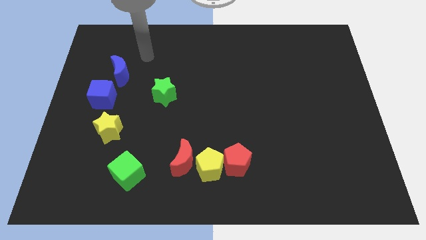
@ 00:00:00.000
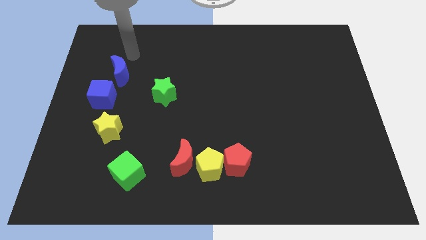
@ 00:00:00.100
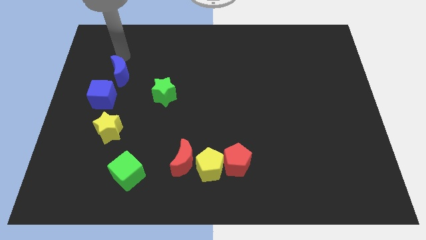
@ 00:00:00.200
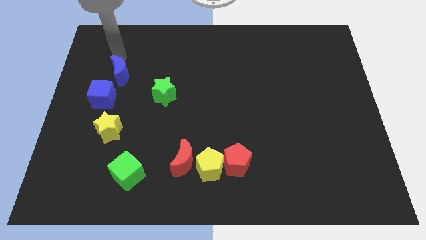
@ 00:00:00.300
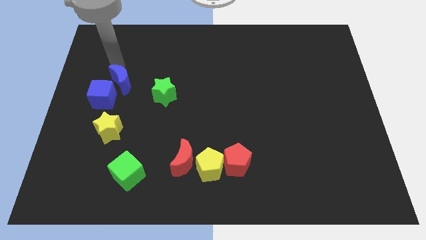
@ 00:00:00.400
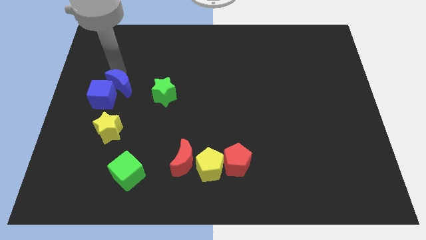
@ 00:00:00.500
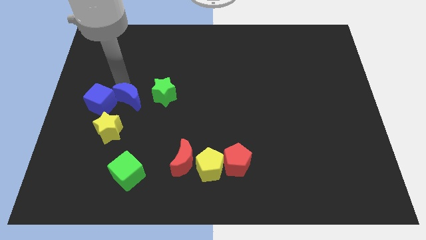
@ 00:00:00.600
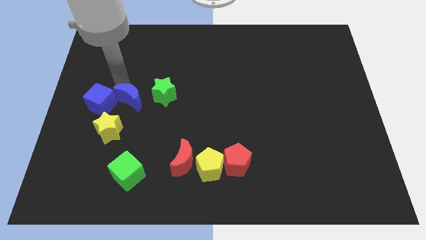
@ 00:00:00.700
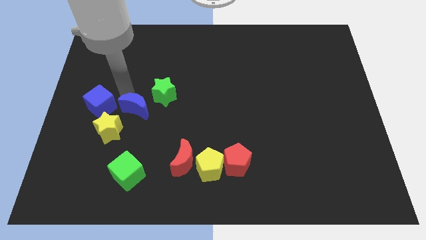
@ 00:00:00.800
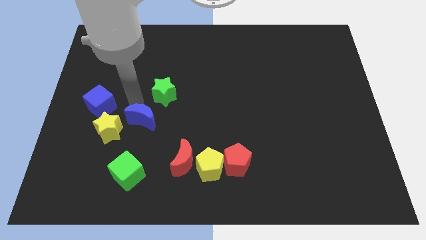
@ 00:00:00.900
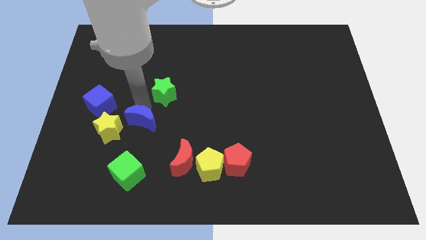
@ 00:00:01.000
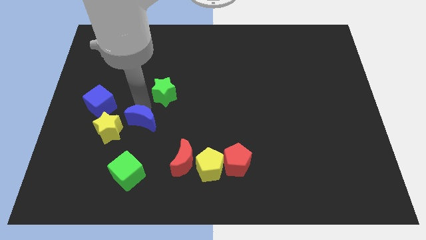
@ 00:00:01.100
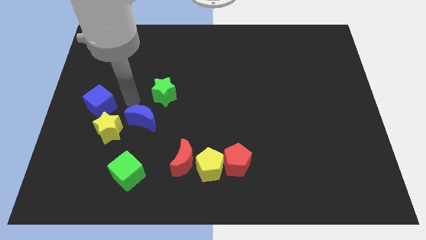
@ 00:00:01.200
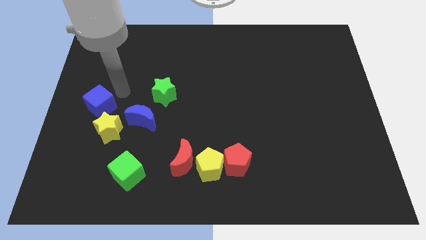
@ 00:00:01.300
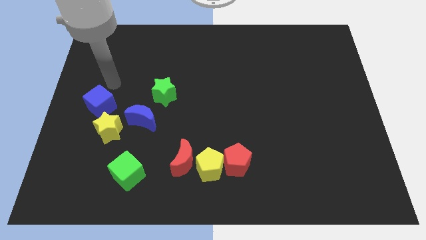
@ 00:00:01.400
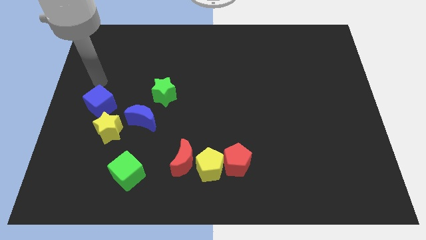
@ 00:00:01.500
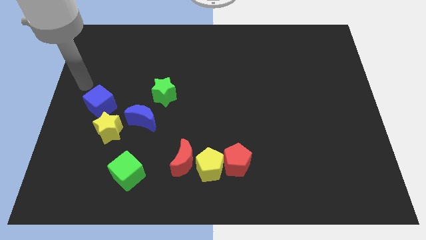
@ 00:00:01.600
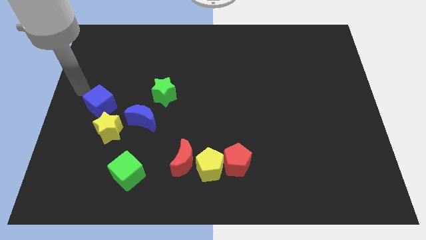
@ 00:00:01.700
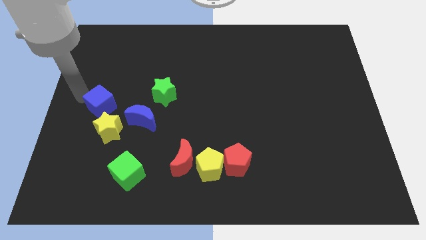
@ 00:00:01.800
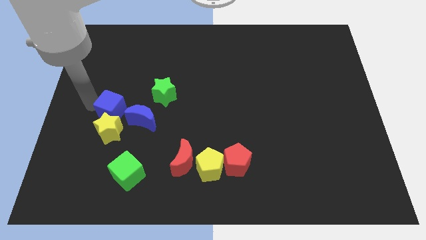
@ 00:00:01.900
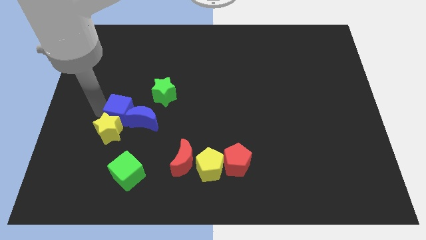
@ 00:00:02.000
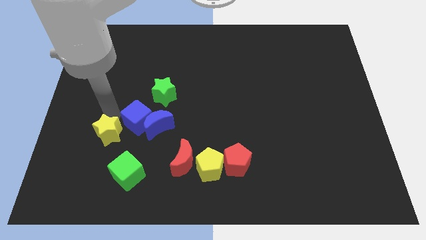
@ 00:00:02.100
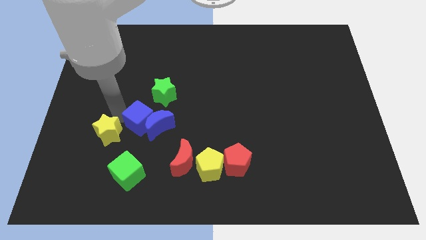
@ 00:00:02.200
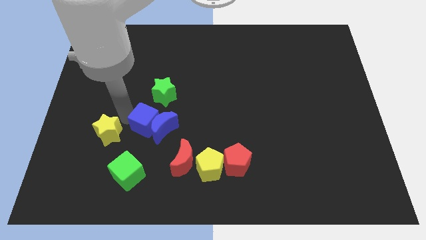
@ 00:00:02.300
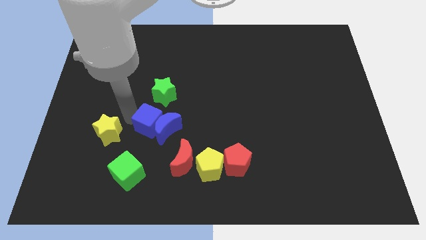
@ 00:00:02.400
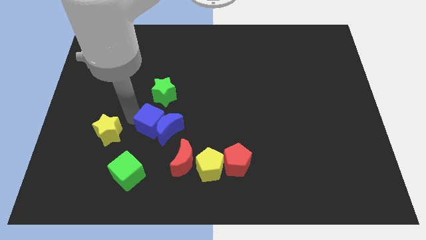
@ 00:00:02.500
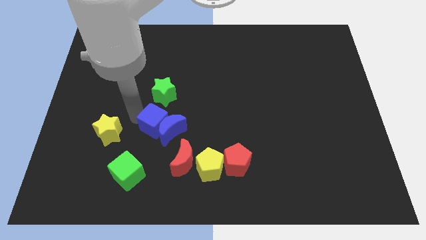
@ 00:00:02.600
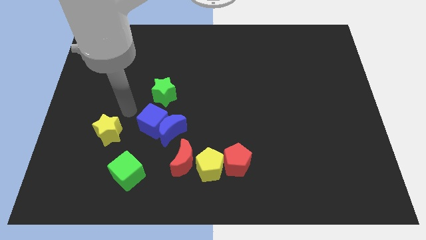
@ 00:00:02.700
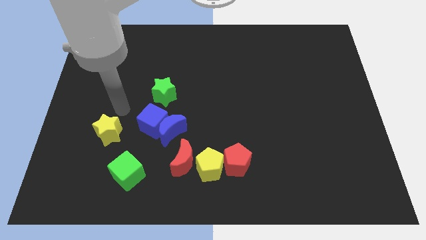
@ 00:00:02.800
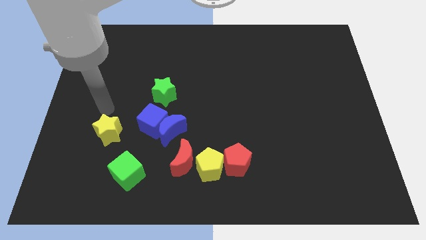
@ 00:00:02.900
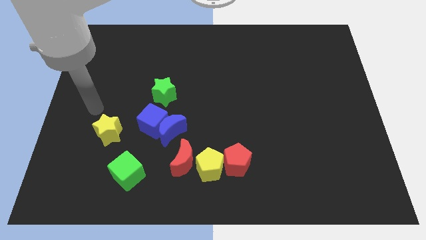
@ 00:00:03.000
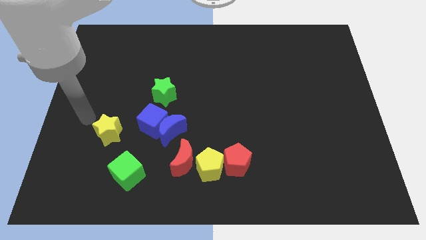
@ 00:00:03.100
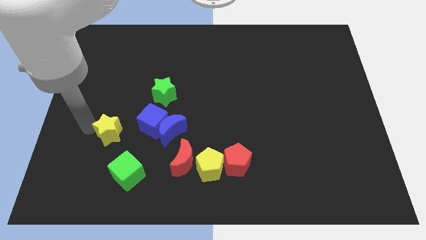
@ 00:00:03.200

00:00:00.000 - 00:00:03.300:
move the blue blocks together towards the group of blocks

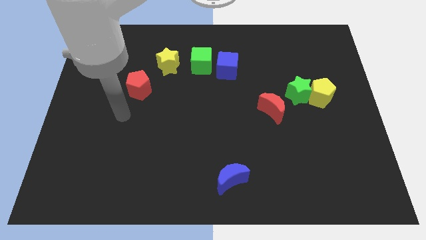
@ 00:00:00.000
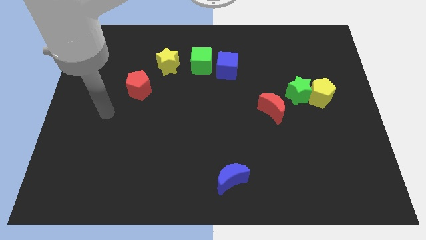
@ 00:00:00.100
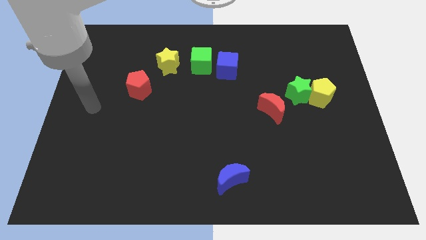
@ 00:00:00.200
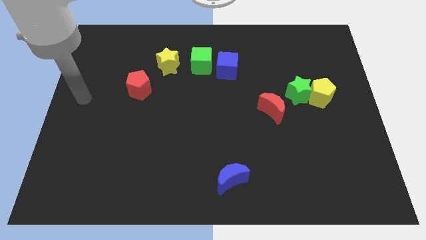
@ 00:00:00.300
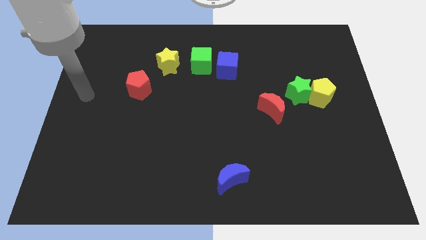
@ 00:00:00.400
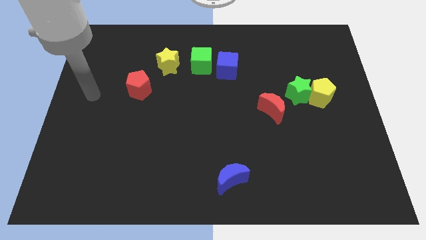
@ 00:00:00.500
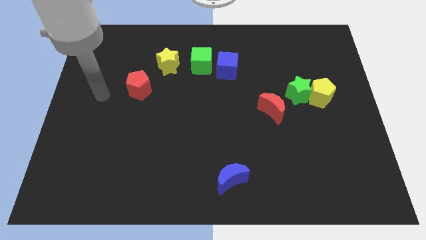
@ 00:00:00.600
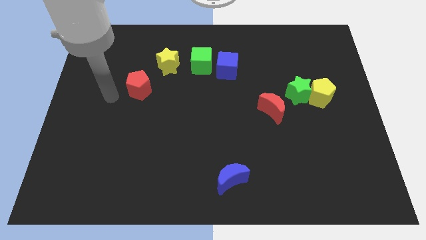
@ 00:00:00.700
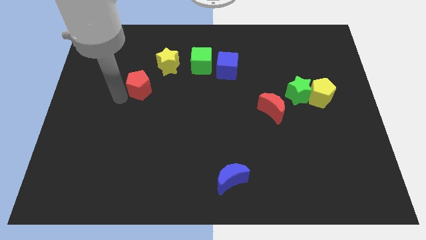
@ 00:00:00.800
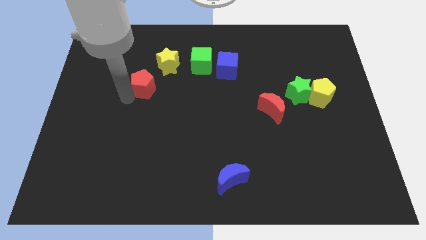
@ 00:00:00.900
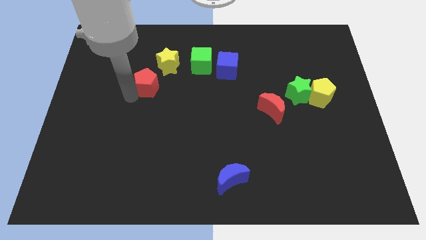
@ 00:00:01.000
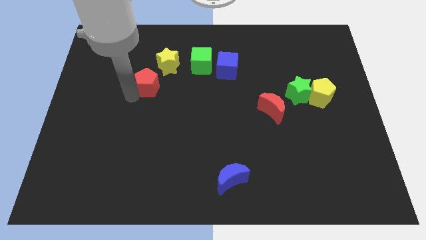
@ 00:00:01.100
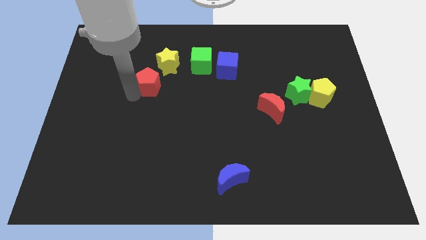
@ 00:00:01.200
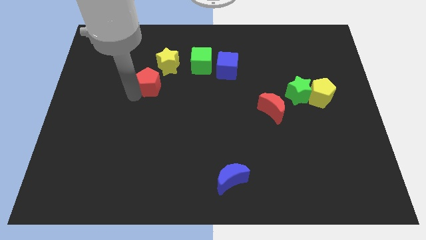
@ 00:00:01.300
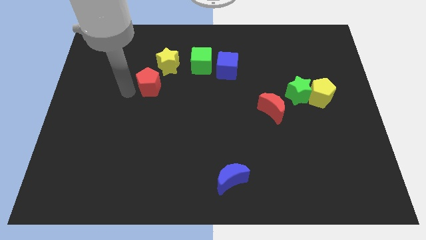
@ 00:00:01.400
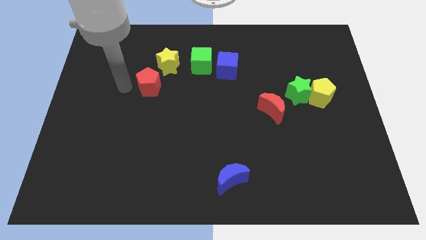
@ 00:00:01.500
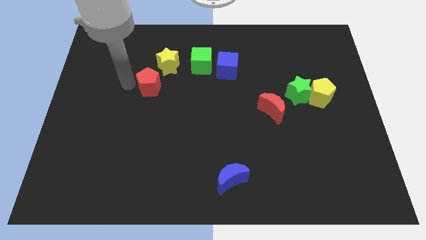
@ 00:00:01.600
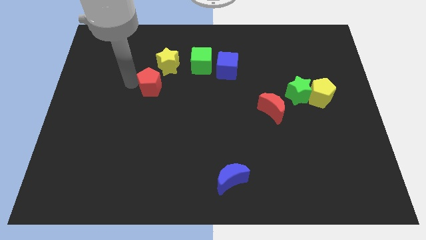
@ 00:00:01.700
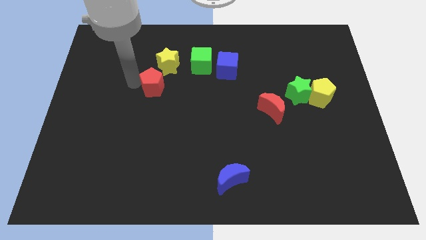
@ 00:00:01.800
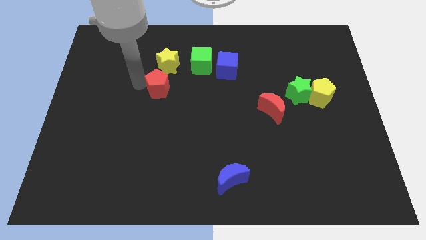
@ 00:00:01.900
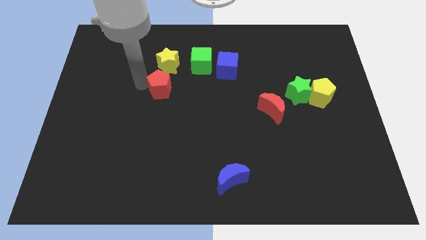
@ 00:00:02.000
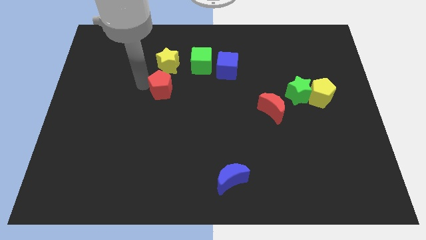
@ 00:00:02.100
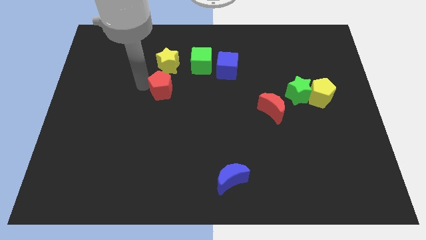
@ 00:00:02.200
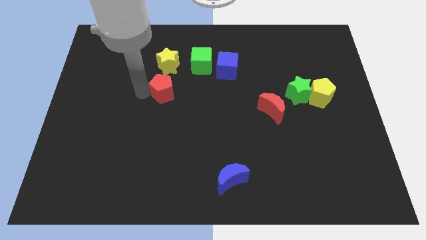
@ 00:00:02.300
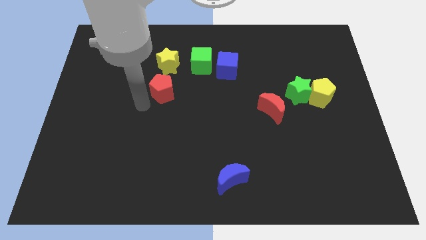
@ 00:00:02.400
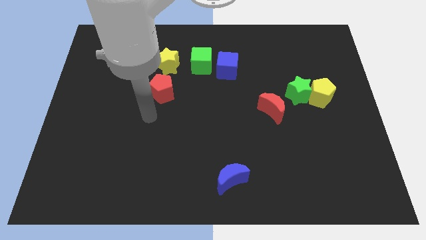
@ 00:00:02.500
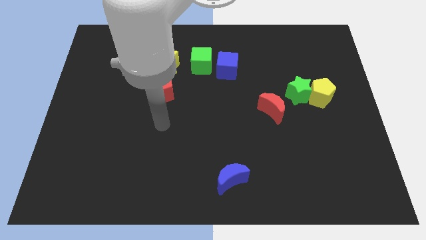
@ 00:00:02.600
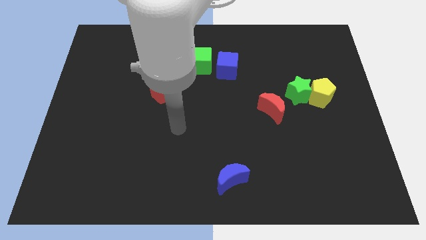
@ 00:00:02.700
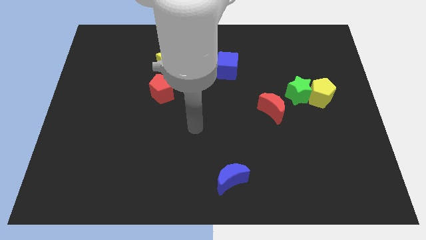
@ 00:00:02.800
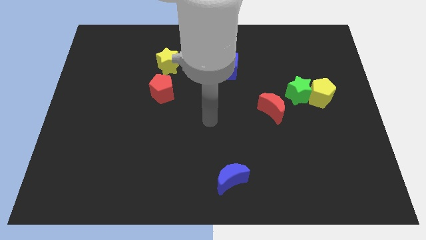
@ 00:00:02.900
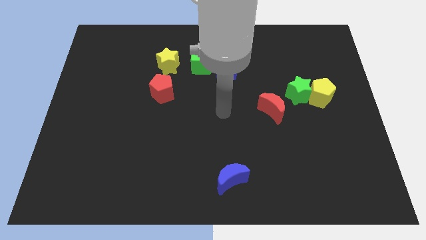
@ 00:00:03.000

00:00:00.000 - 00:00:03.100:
put the red pentagon below the yellow star and go away

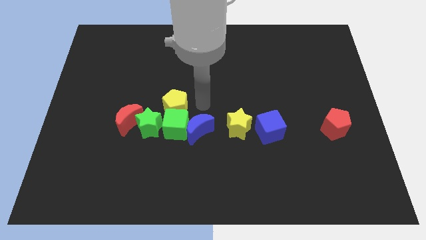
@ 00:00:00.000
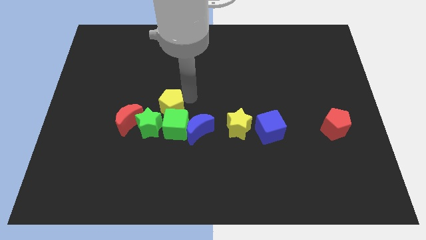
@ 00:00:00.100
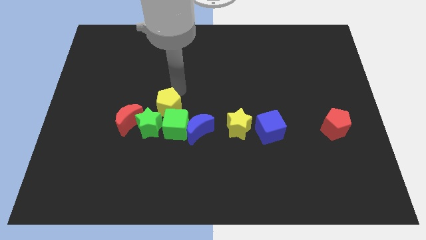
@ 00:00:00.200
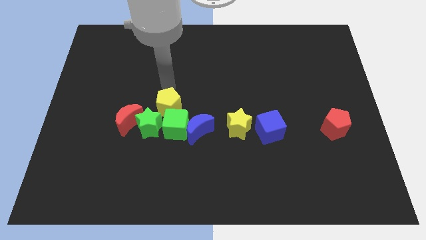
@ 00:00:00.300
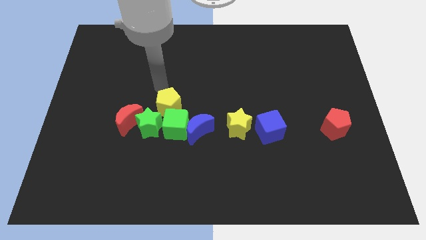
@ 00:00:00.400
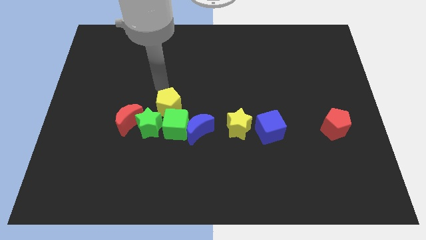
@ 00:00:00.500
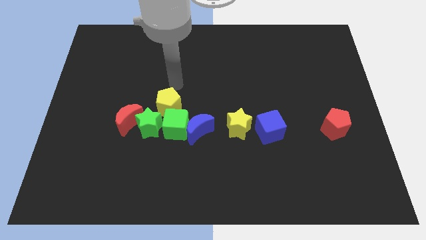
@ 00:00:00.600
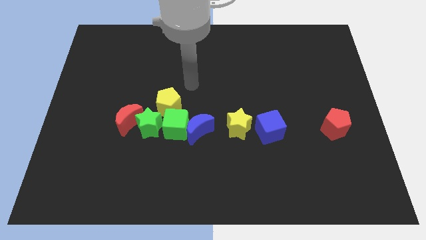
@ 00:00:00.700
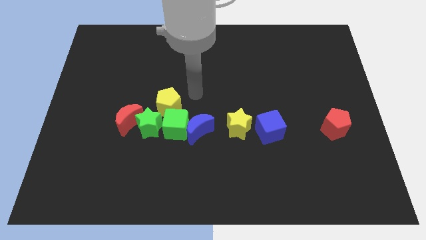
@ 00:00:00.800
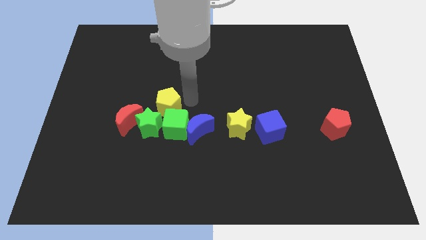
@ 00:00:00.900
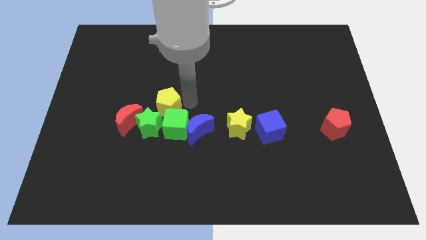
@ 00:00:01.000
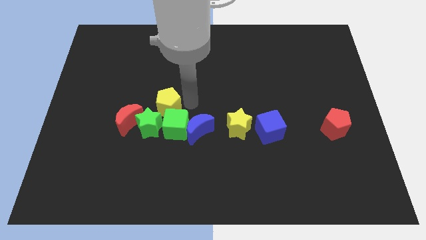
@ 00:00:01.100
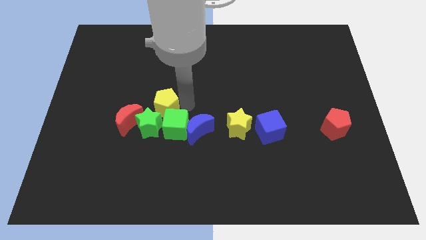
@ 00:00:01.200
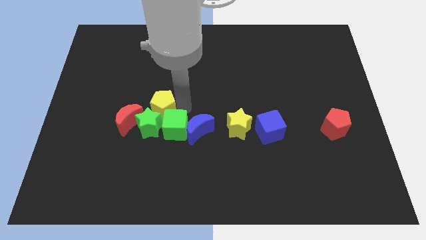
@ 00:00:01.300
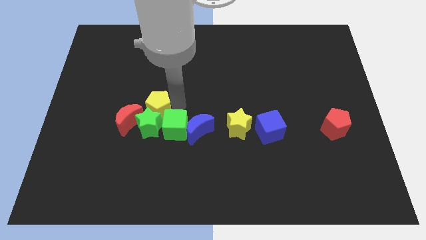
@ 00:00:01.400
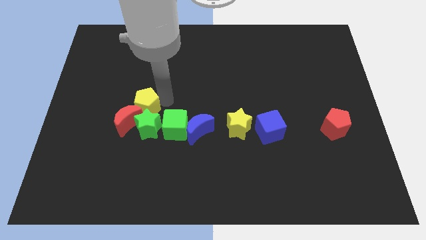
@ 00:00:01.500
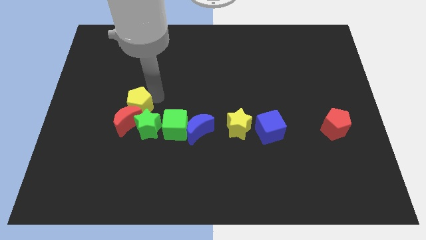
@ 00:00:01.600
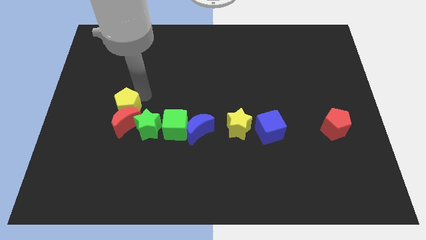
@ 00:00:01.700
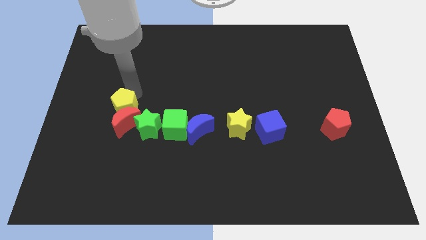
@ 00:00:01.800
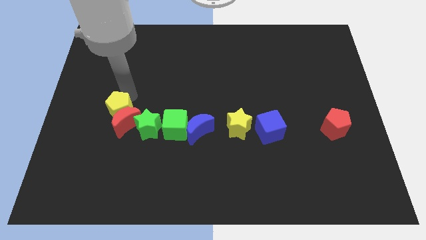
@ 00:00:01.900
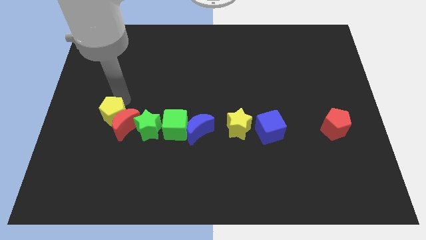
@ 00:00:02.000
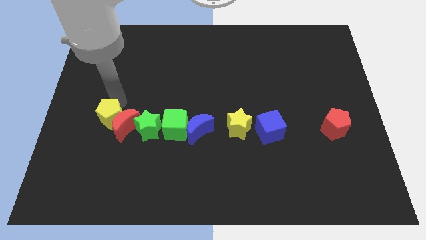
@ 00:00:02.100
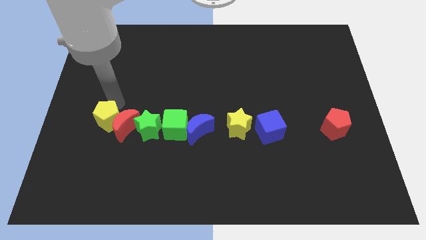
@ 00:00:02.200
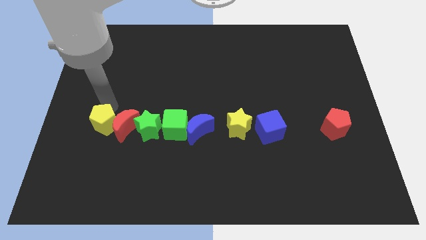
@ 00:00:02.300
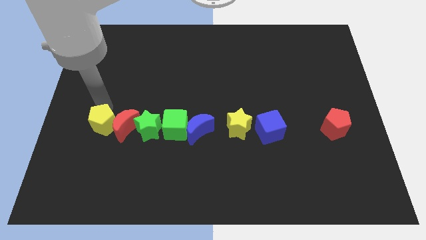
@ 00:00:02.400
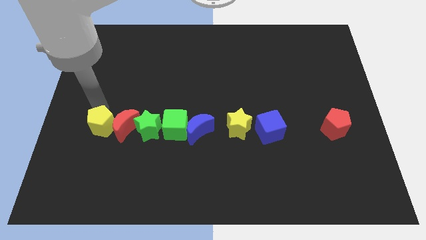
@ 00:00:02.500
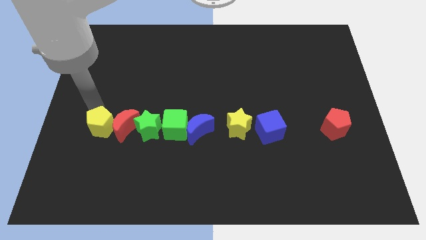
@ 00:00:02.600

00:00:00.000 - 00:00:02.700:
move yellow pentagon left of the red moon
